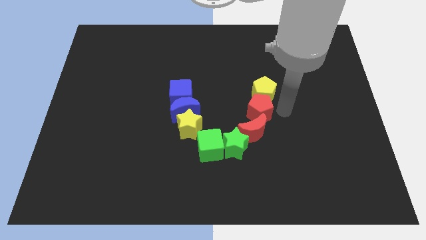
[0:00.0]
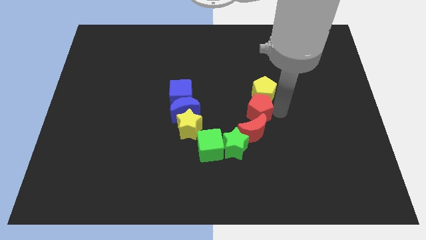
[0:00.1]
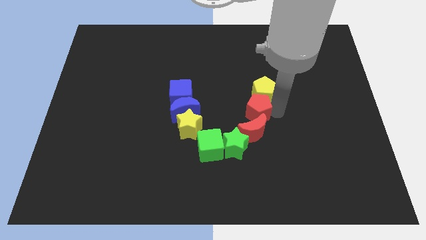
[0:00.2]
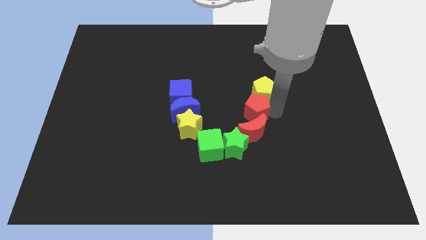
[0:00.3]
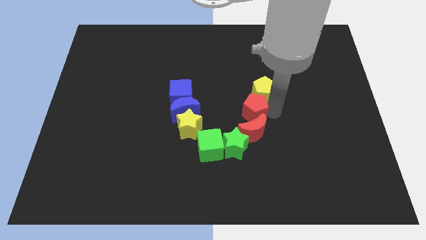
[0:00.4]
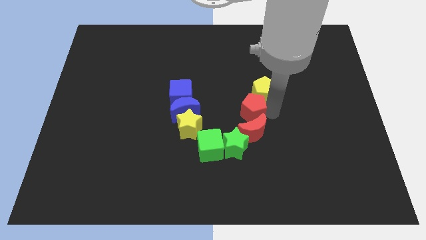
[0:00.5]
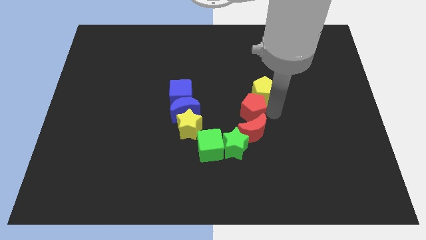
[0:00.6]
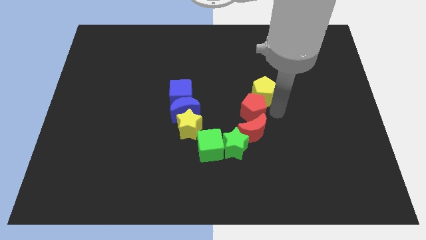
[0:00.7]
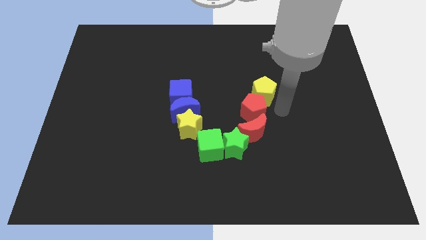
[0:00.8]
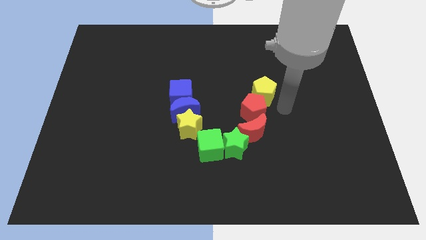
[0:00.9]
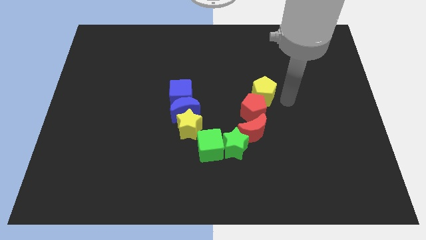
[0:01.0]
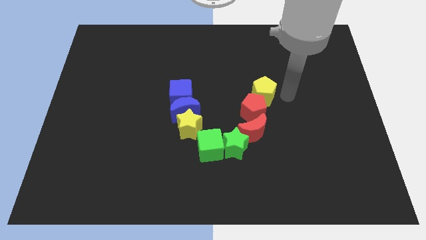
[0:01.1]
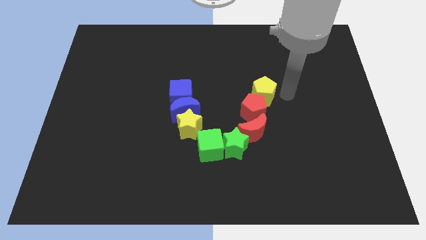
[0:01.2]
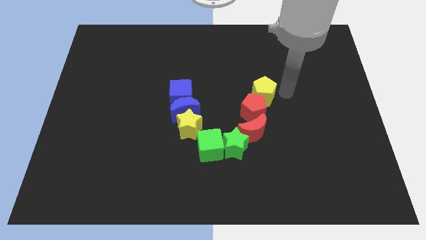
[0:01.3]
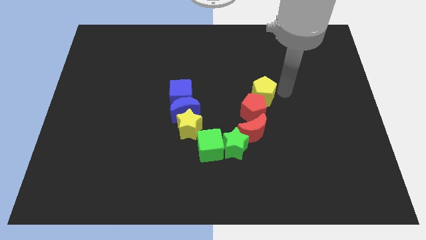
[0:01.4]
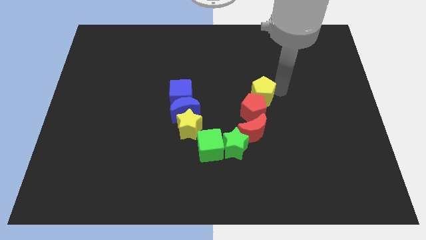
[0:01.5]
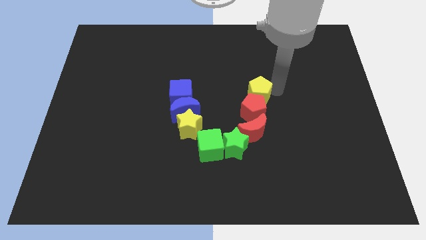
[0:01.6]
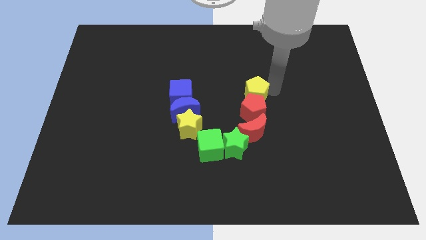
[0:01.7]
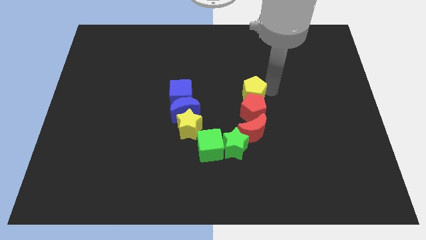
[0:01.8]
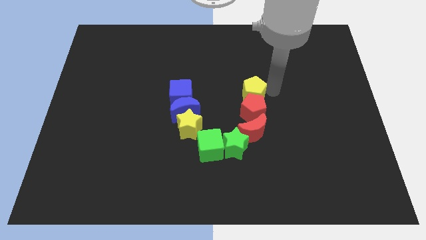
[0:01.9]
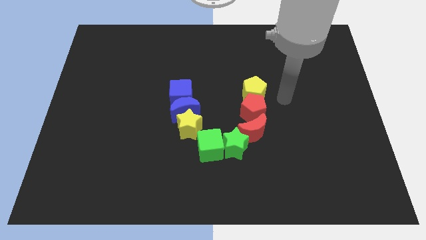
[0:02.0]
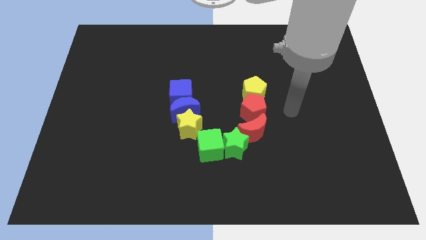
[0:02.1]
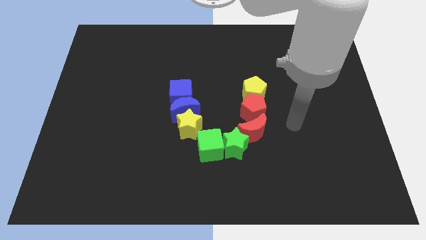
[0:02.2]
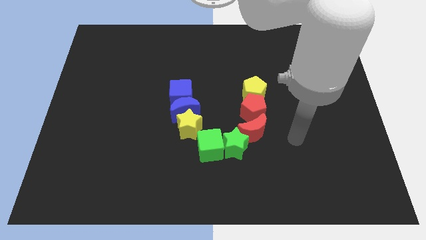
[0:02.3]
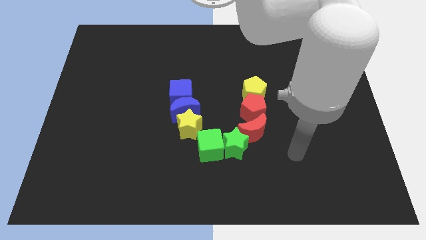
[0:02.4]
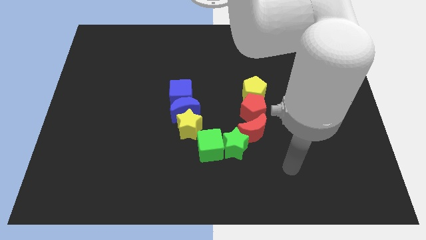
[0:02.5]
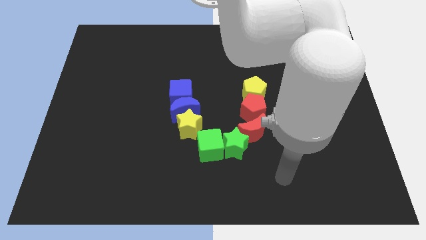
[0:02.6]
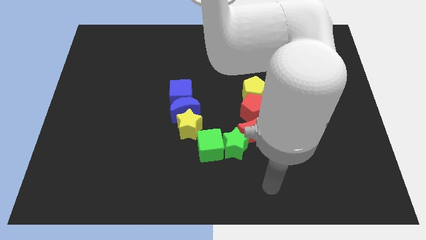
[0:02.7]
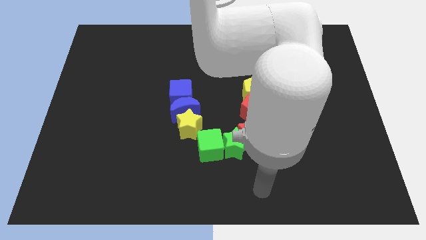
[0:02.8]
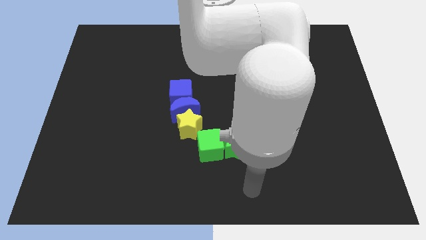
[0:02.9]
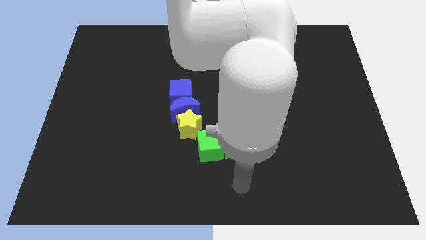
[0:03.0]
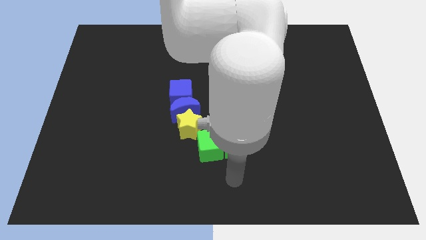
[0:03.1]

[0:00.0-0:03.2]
adjust the red pentagon and yellow oentagon to the top of the red crescent

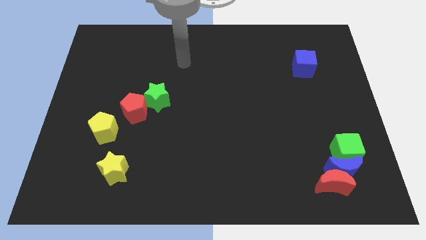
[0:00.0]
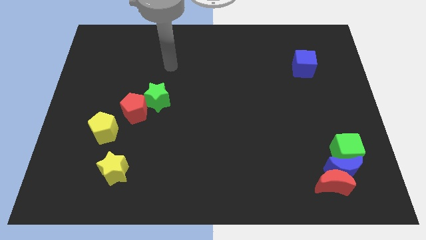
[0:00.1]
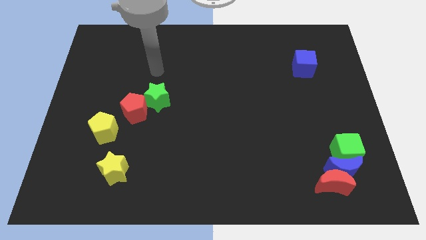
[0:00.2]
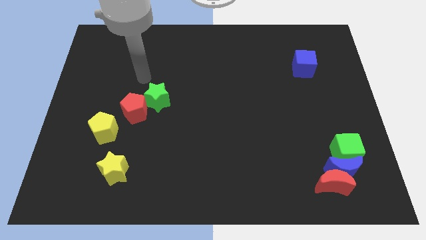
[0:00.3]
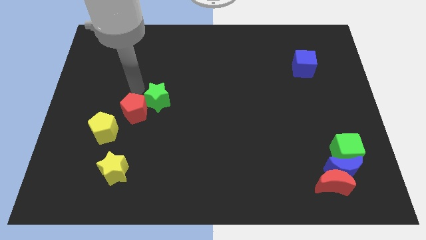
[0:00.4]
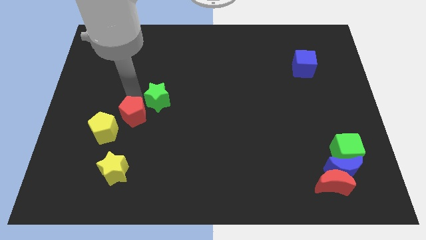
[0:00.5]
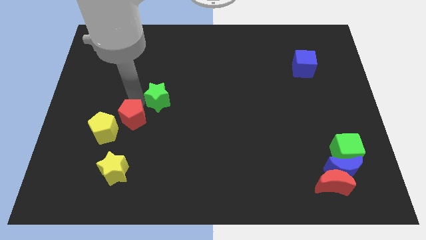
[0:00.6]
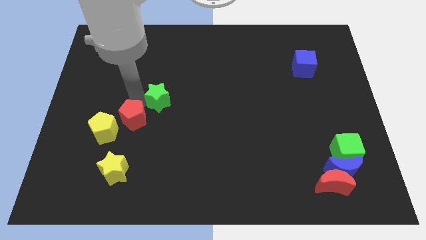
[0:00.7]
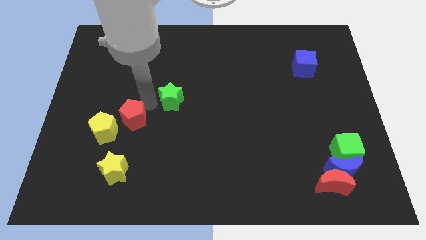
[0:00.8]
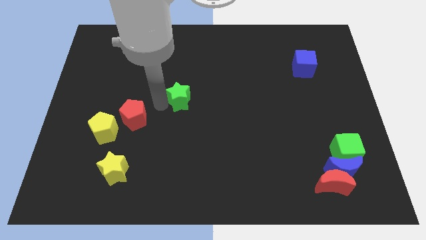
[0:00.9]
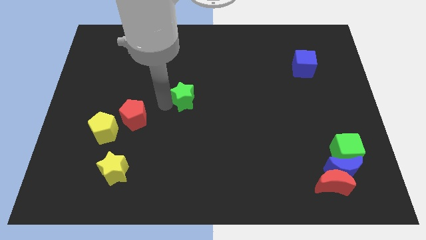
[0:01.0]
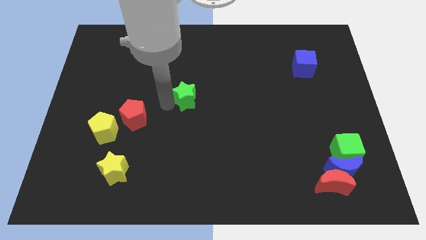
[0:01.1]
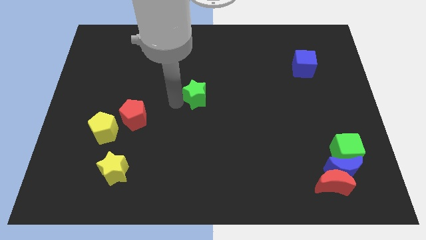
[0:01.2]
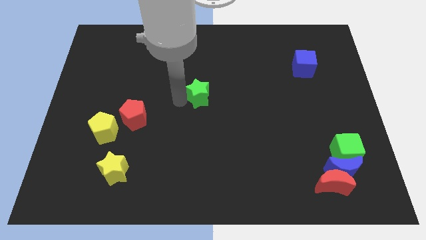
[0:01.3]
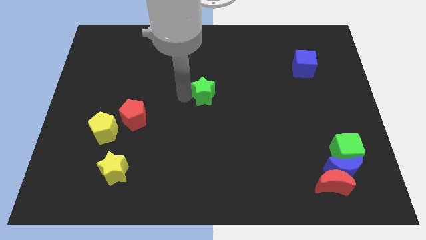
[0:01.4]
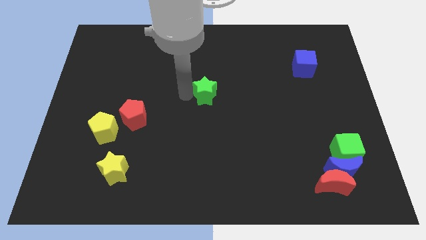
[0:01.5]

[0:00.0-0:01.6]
move the green star away from the red pentagon

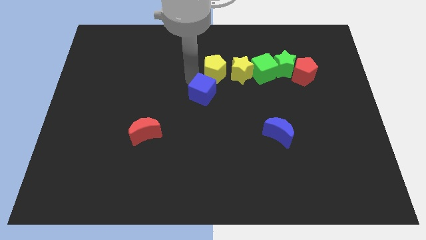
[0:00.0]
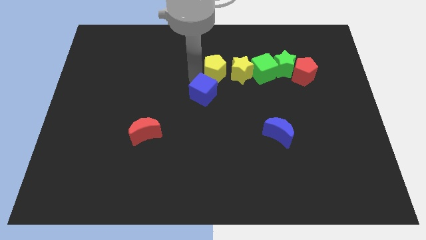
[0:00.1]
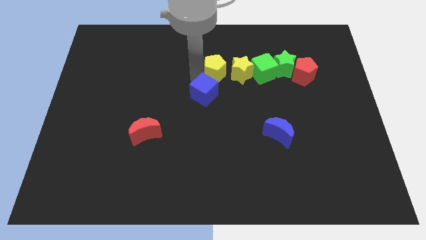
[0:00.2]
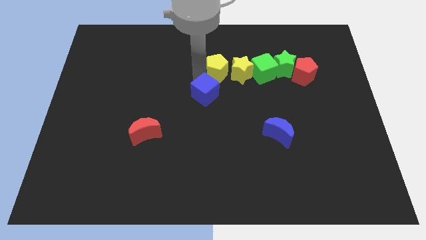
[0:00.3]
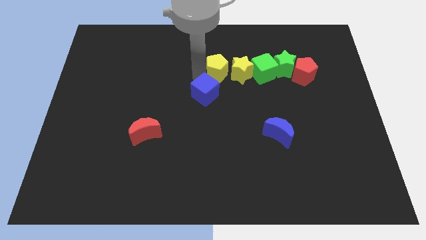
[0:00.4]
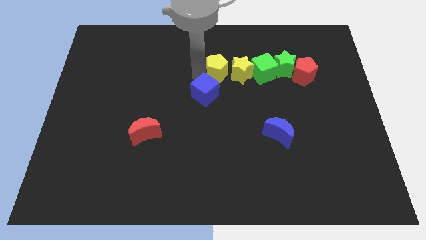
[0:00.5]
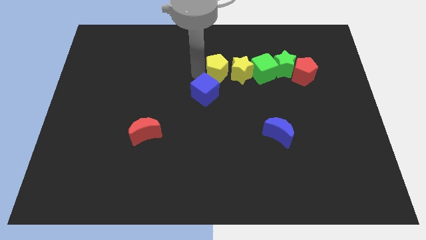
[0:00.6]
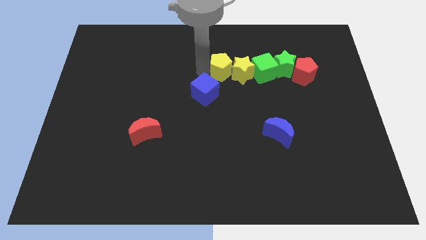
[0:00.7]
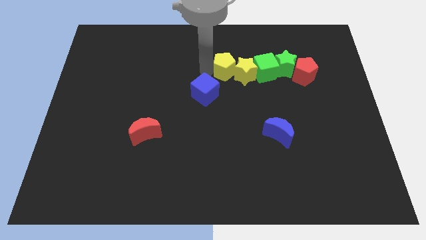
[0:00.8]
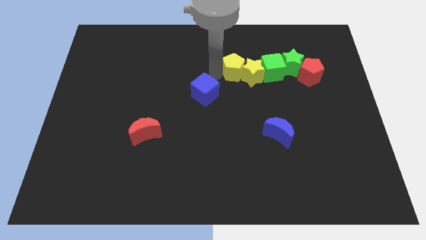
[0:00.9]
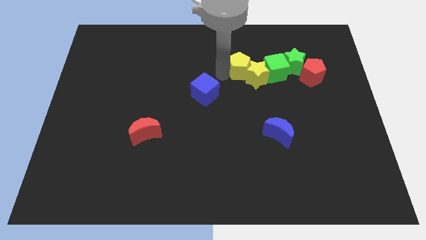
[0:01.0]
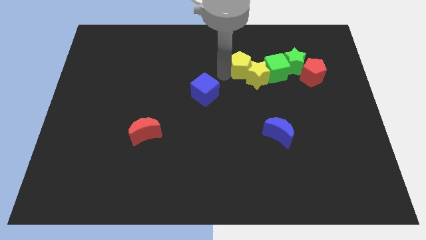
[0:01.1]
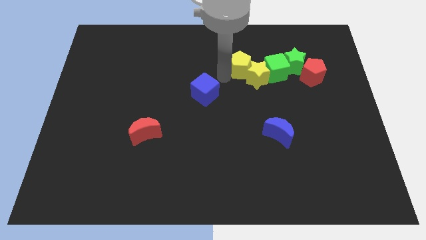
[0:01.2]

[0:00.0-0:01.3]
push yellow pentagon into yellow star

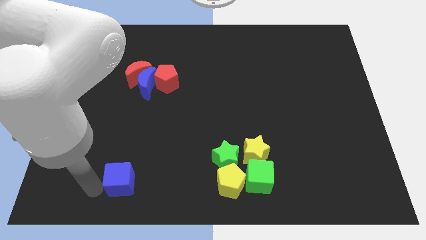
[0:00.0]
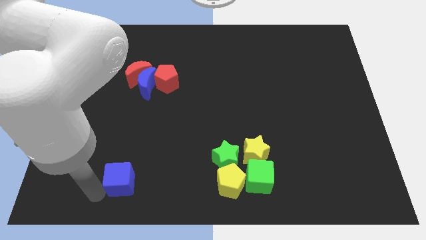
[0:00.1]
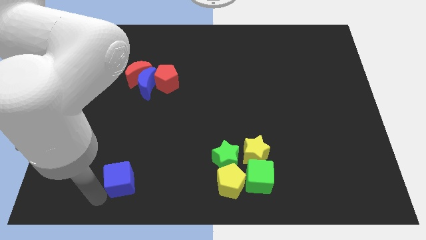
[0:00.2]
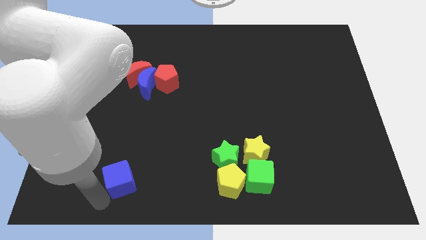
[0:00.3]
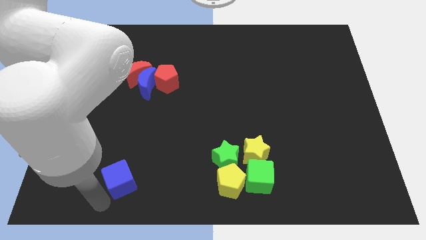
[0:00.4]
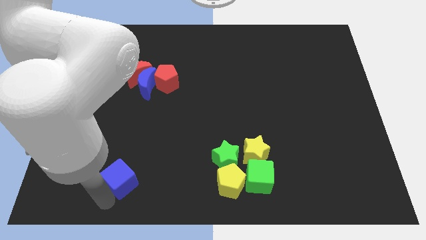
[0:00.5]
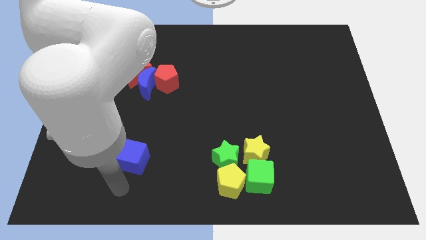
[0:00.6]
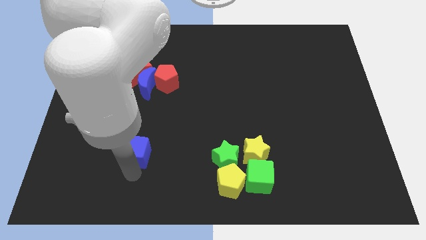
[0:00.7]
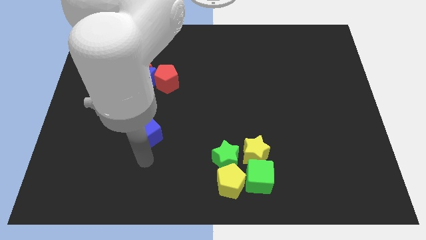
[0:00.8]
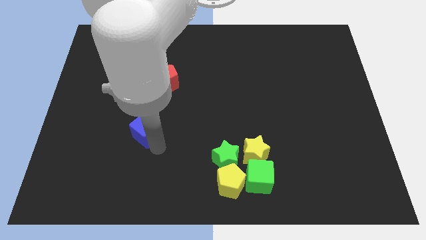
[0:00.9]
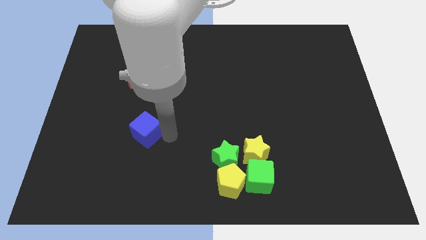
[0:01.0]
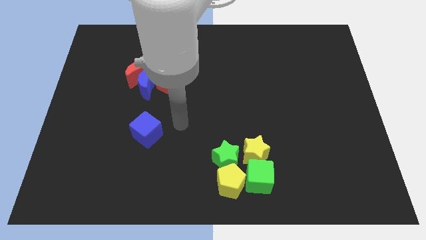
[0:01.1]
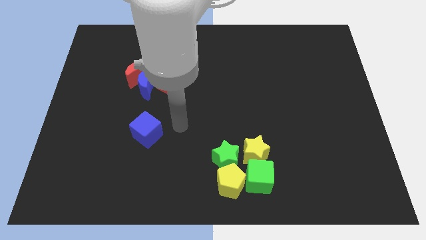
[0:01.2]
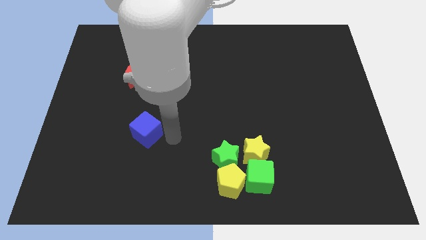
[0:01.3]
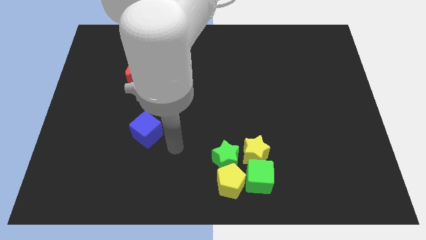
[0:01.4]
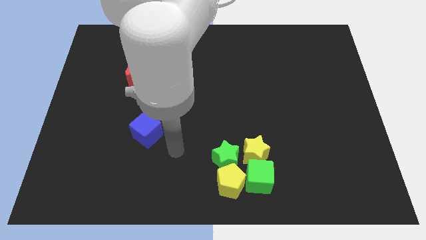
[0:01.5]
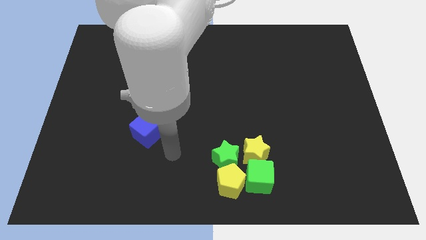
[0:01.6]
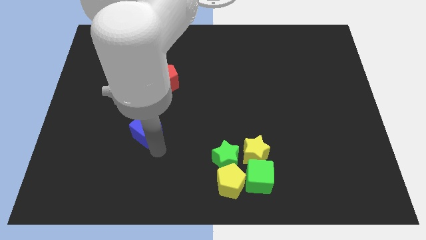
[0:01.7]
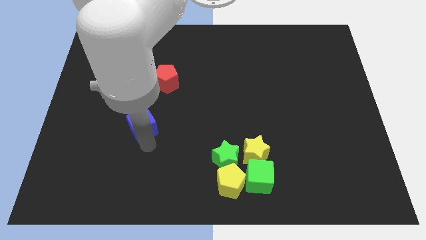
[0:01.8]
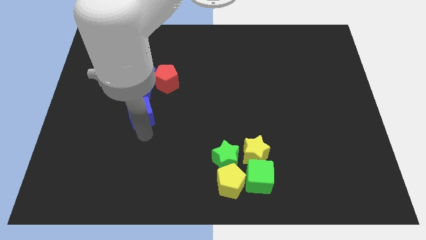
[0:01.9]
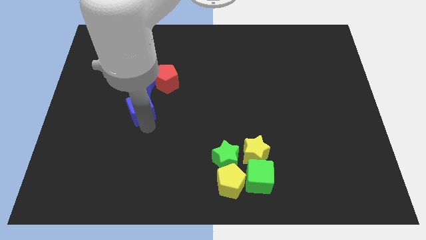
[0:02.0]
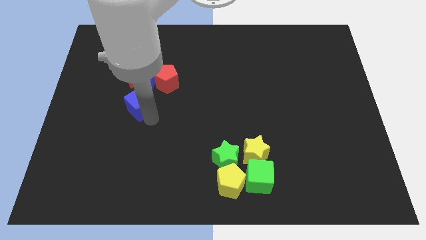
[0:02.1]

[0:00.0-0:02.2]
place blue cube below the blue moon

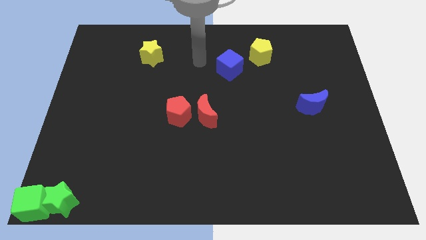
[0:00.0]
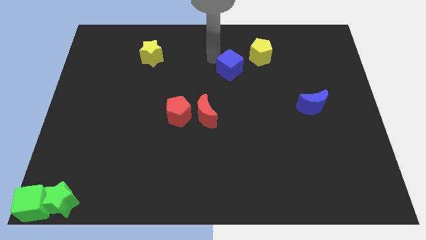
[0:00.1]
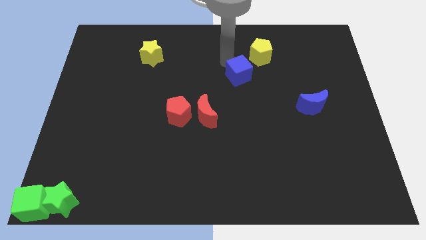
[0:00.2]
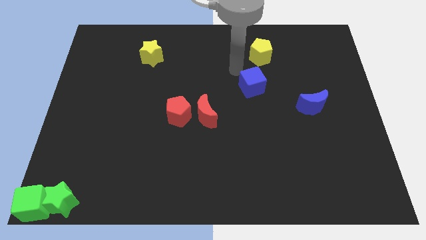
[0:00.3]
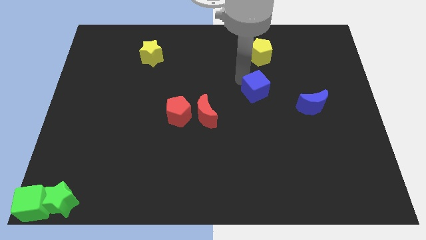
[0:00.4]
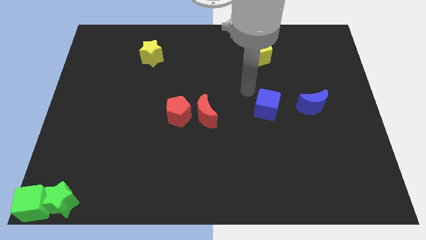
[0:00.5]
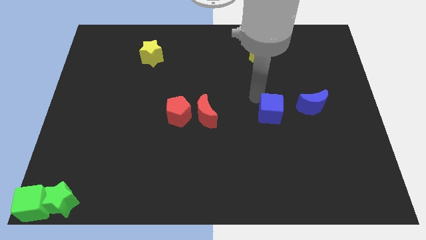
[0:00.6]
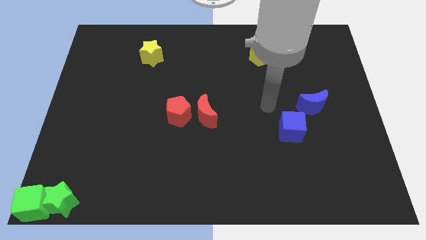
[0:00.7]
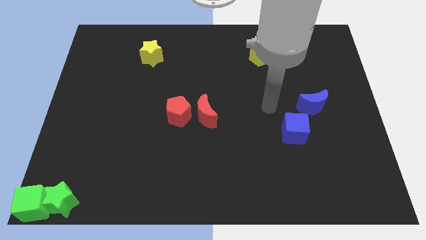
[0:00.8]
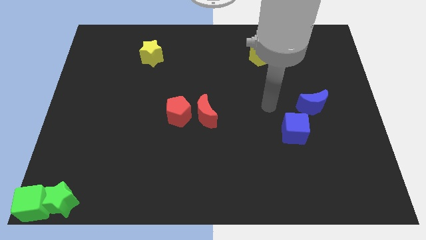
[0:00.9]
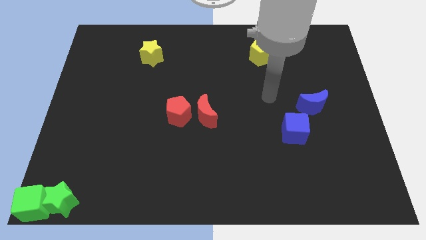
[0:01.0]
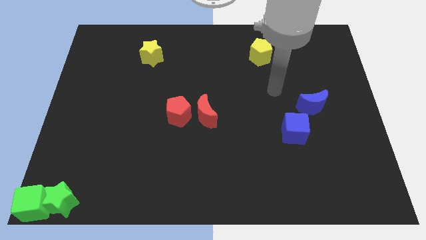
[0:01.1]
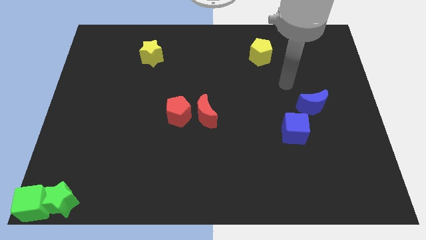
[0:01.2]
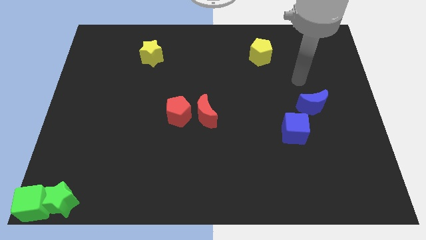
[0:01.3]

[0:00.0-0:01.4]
push blue cube downwards below the blue moon
